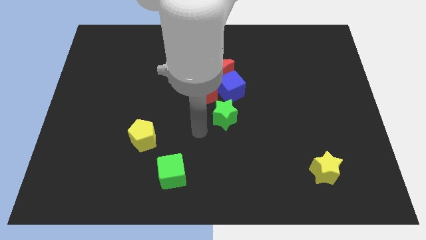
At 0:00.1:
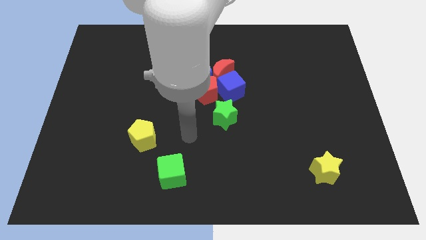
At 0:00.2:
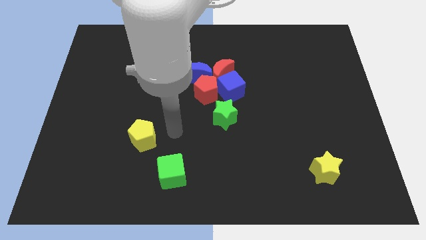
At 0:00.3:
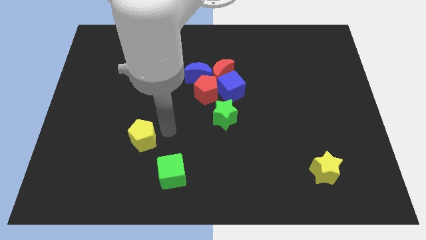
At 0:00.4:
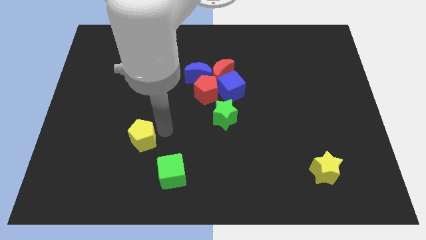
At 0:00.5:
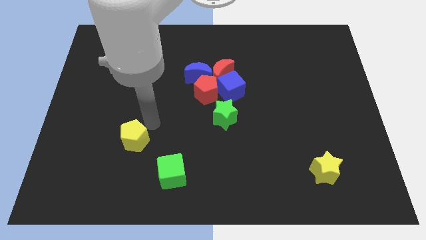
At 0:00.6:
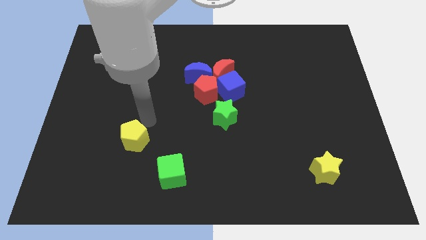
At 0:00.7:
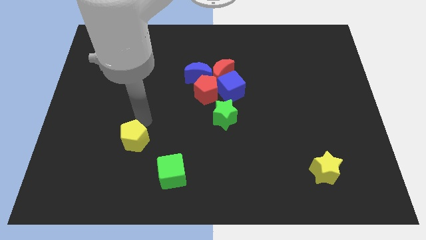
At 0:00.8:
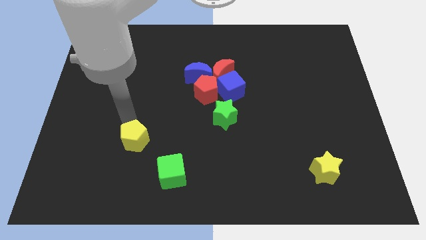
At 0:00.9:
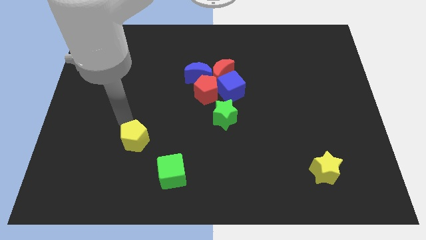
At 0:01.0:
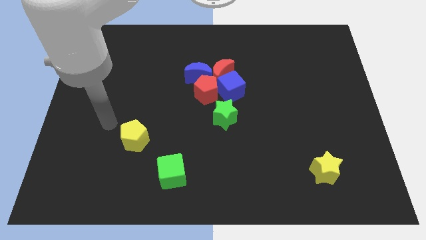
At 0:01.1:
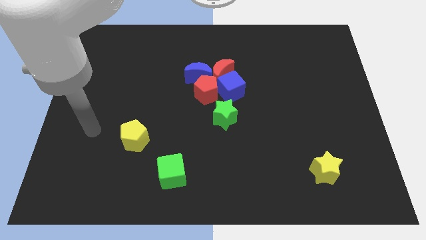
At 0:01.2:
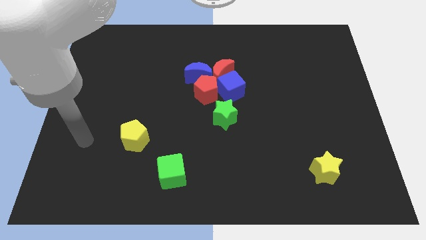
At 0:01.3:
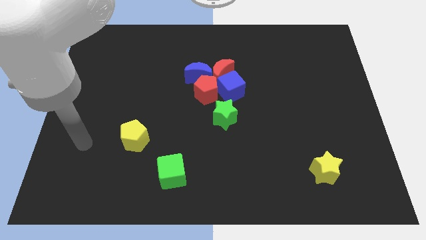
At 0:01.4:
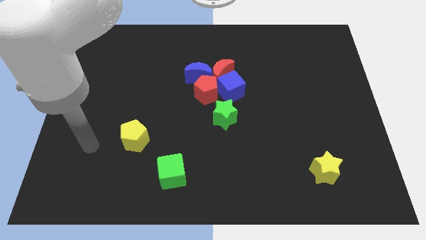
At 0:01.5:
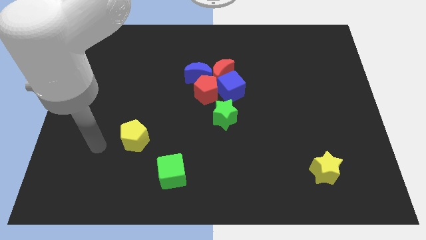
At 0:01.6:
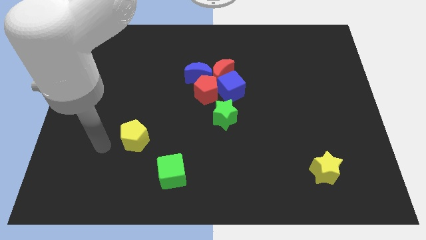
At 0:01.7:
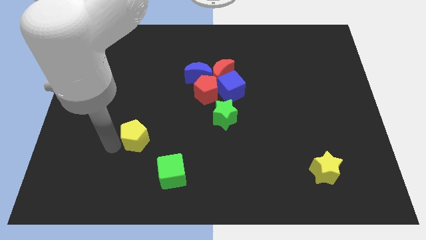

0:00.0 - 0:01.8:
move your arm towards the left side of the yellow pentagon

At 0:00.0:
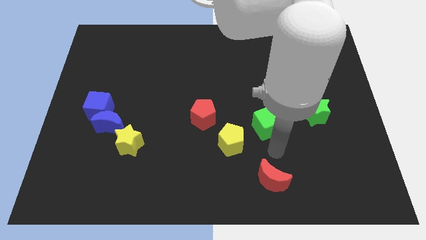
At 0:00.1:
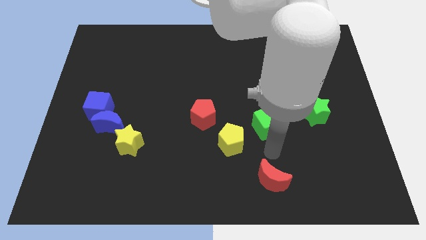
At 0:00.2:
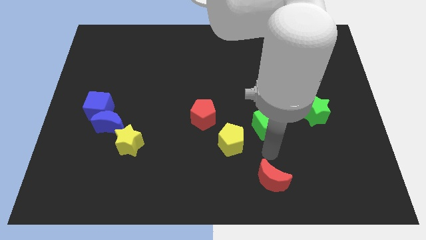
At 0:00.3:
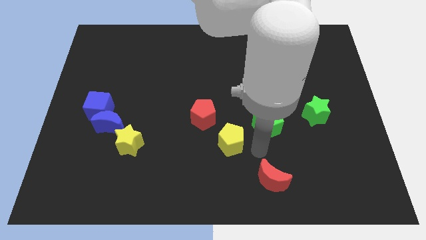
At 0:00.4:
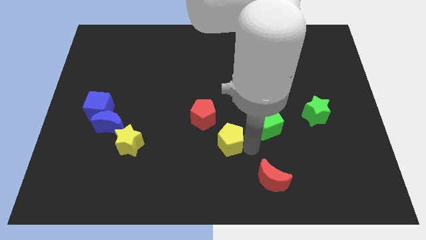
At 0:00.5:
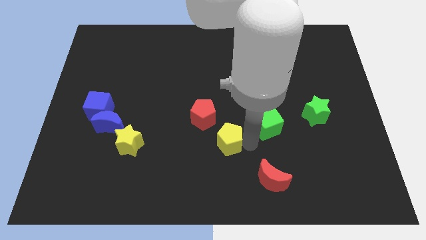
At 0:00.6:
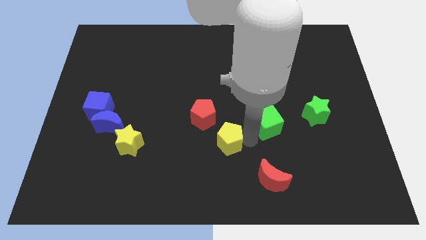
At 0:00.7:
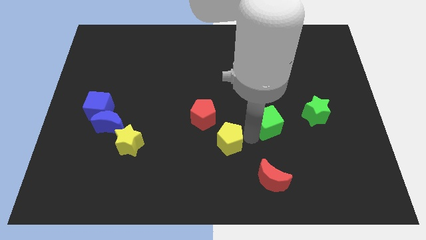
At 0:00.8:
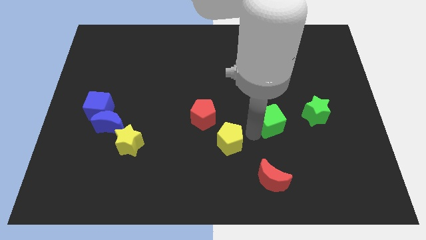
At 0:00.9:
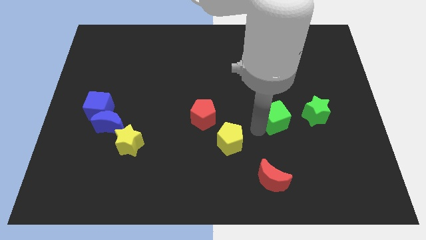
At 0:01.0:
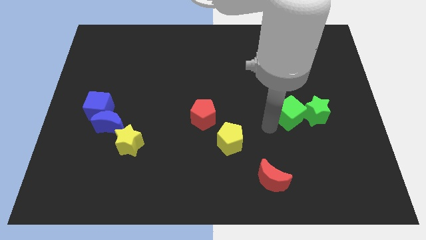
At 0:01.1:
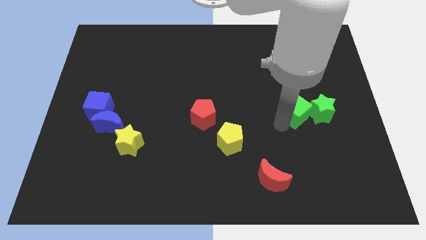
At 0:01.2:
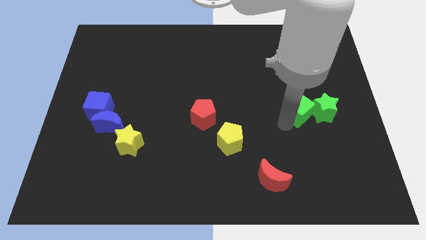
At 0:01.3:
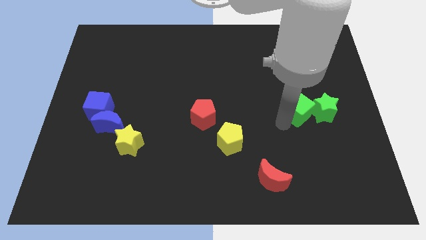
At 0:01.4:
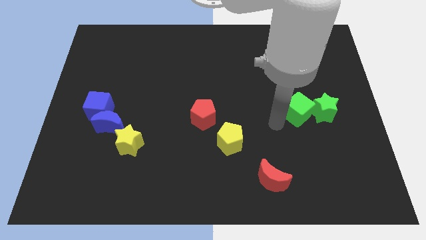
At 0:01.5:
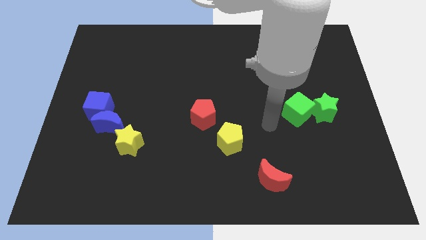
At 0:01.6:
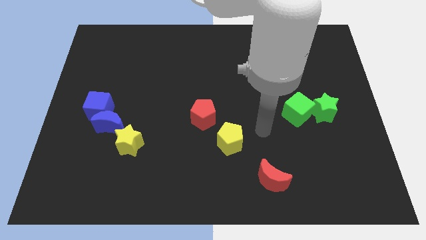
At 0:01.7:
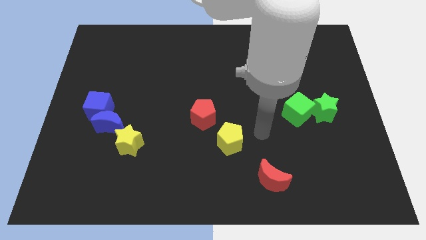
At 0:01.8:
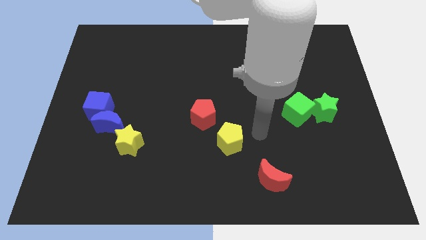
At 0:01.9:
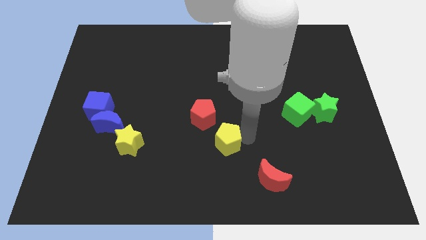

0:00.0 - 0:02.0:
move the green cube left beside the green star

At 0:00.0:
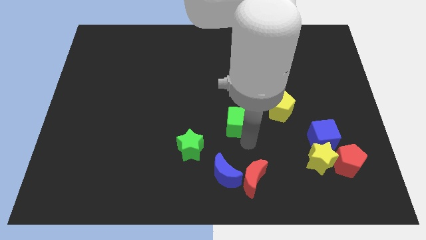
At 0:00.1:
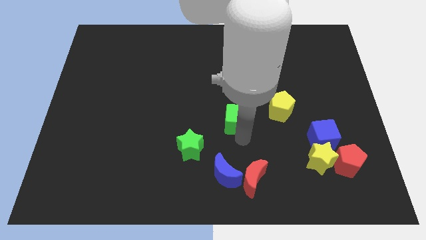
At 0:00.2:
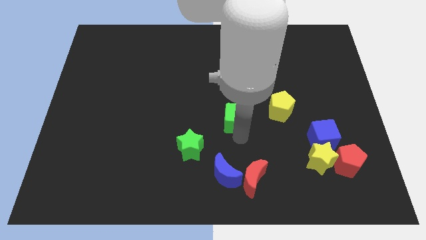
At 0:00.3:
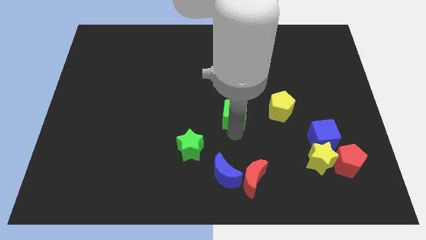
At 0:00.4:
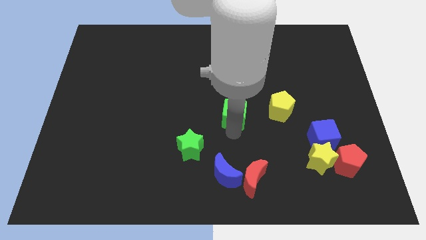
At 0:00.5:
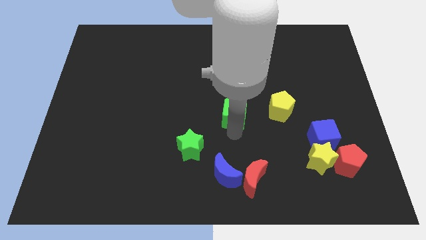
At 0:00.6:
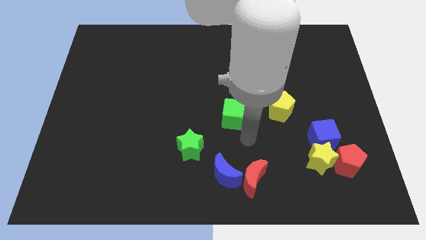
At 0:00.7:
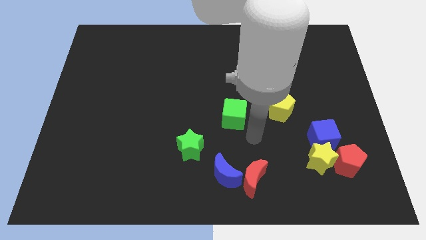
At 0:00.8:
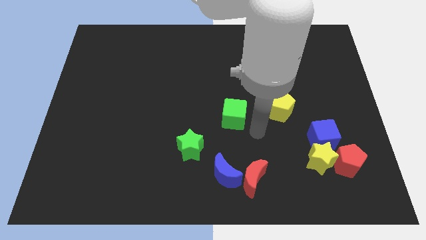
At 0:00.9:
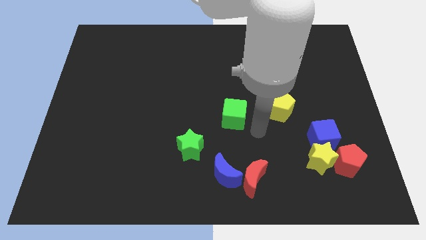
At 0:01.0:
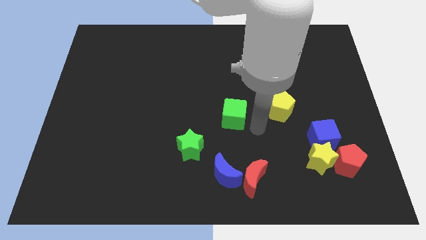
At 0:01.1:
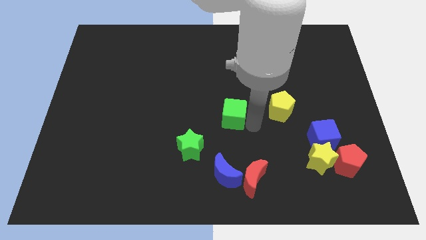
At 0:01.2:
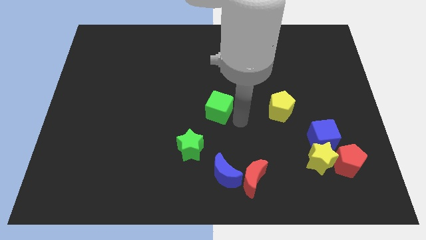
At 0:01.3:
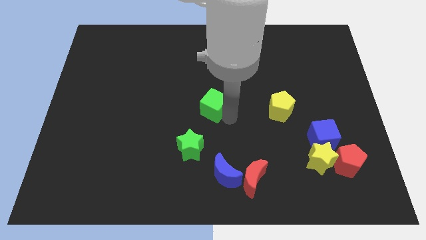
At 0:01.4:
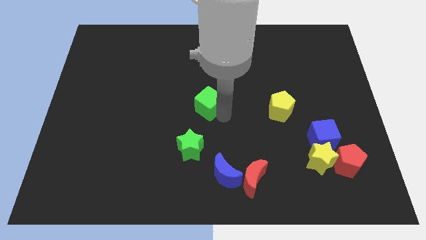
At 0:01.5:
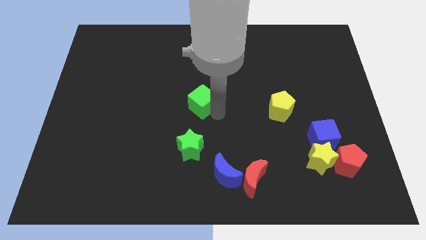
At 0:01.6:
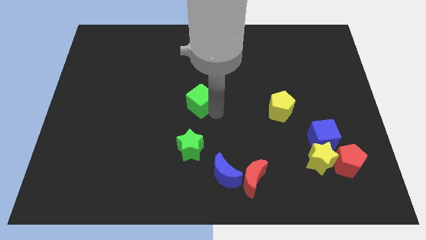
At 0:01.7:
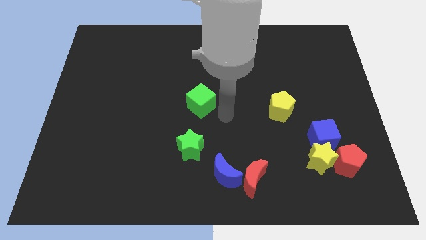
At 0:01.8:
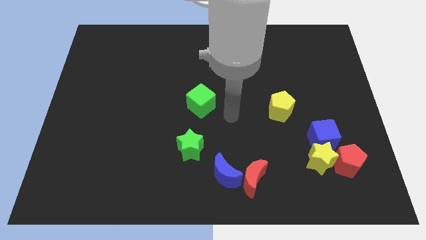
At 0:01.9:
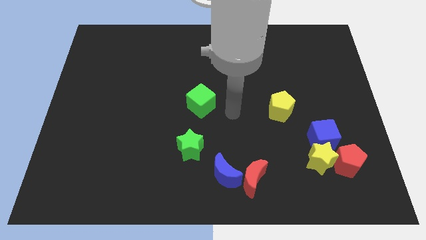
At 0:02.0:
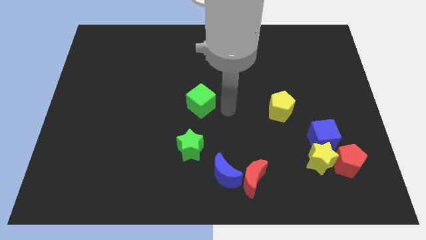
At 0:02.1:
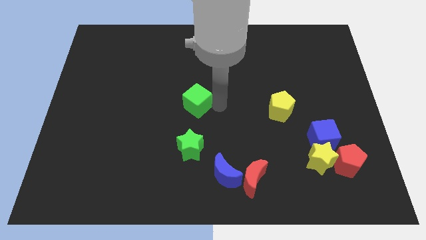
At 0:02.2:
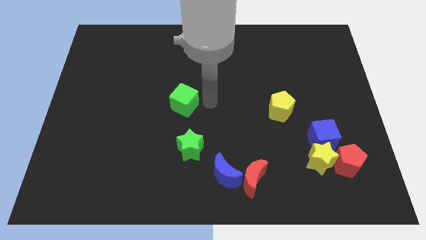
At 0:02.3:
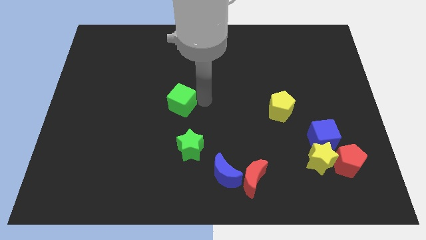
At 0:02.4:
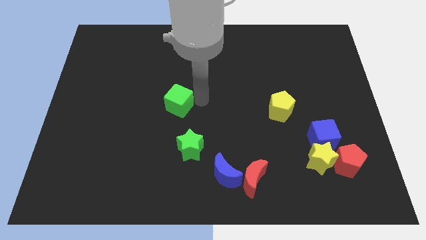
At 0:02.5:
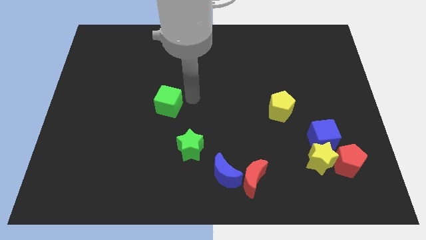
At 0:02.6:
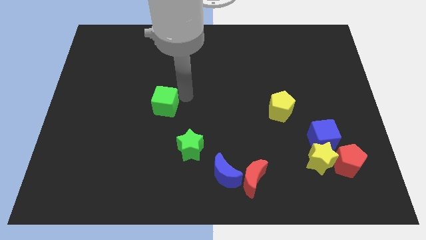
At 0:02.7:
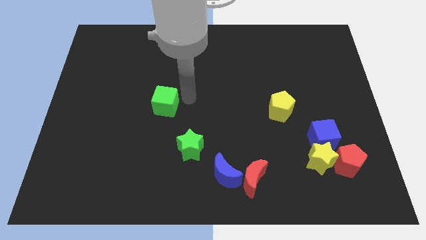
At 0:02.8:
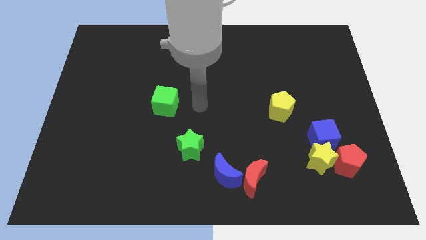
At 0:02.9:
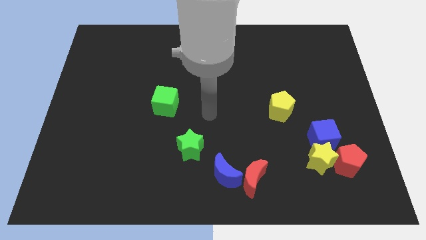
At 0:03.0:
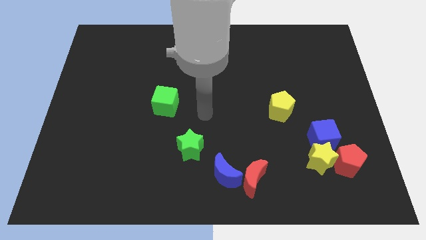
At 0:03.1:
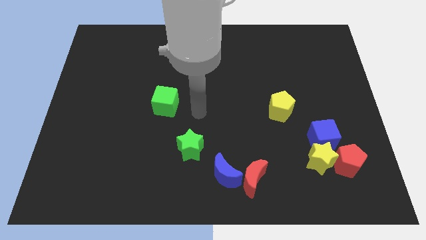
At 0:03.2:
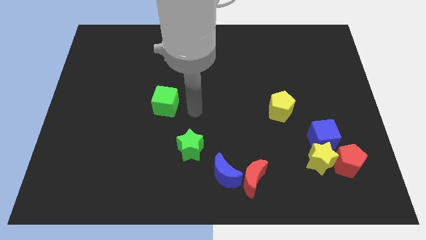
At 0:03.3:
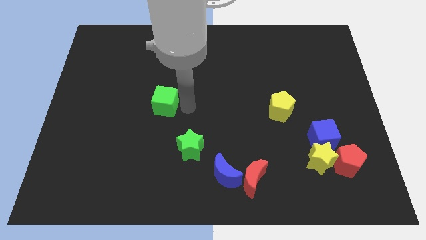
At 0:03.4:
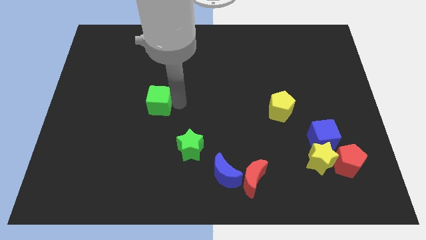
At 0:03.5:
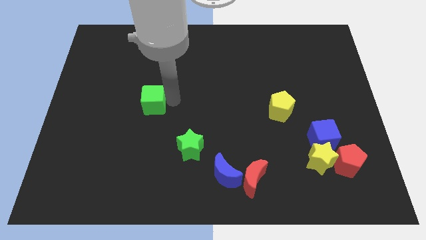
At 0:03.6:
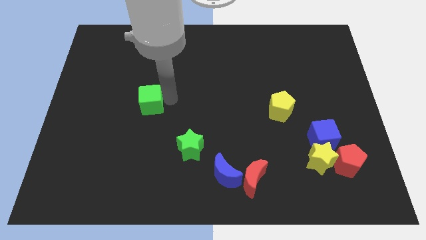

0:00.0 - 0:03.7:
move the green cube to the left side of the yellow pentagon

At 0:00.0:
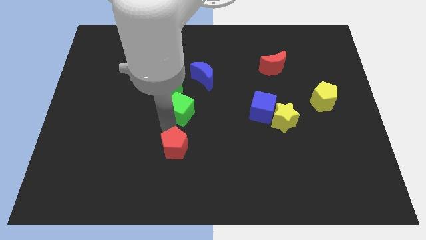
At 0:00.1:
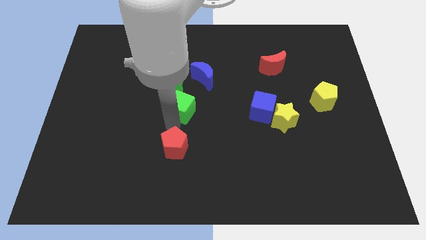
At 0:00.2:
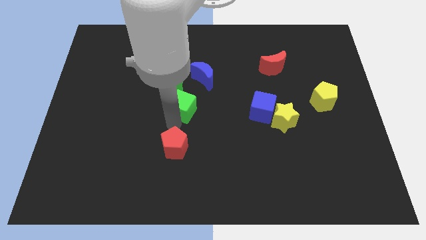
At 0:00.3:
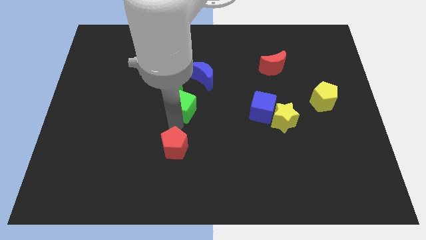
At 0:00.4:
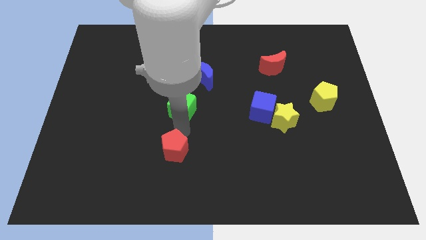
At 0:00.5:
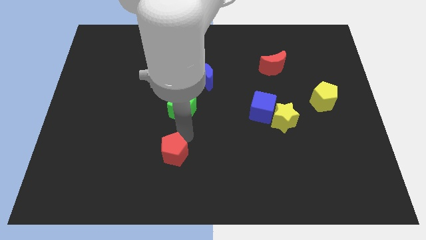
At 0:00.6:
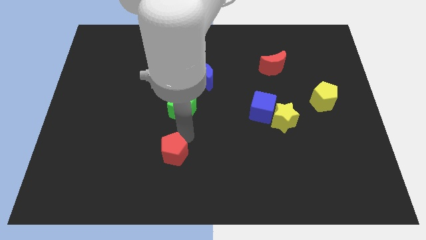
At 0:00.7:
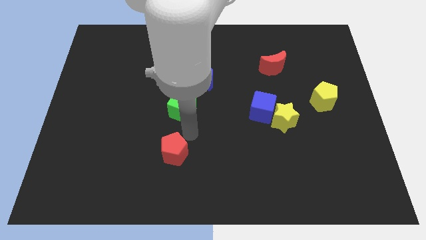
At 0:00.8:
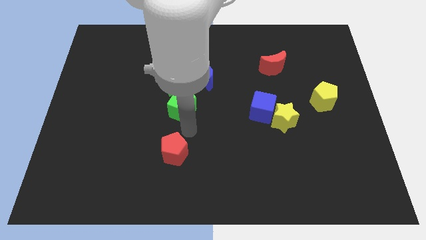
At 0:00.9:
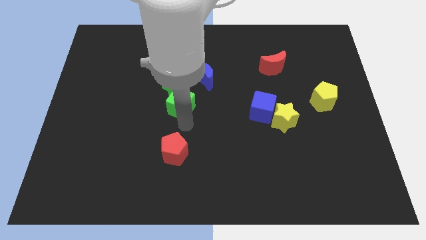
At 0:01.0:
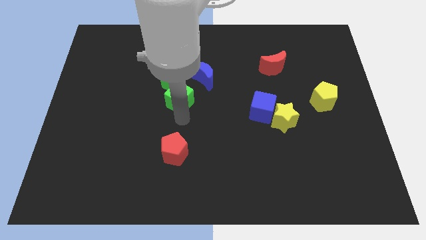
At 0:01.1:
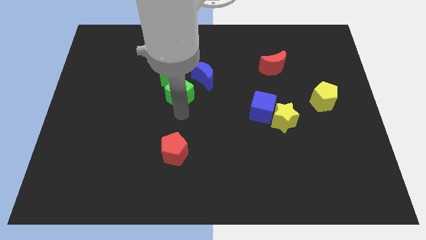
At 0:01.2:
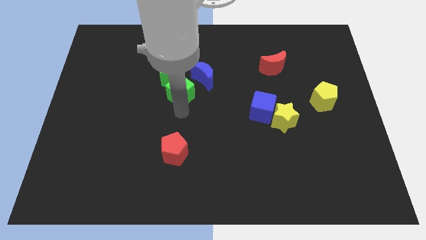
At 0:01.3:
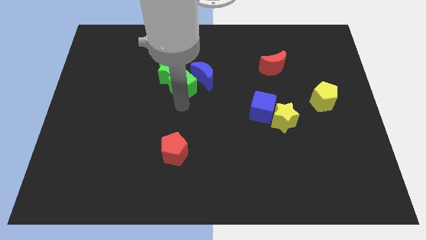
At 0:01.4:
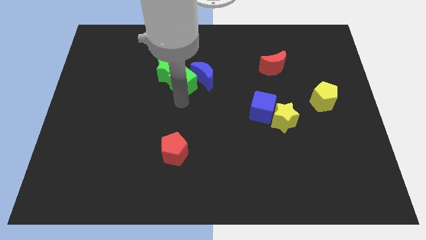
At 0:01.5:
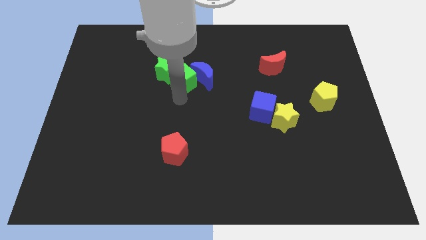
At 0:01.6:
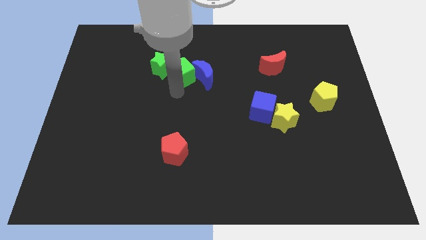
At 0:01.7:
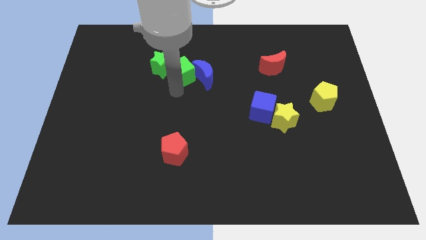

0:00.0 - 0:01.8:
push the group of green blocks to the top
